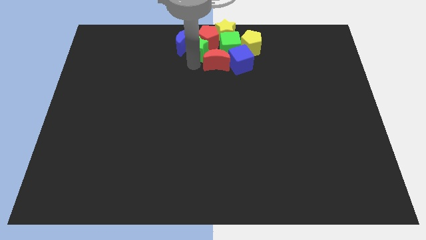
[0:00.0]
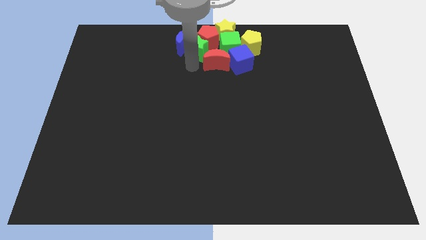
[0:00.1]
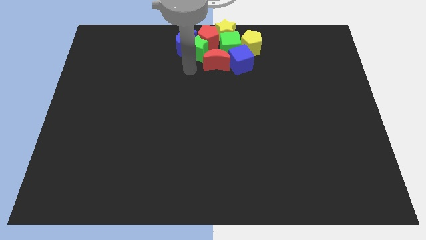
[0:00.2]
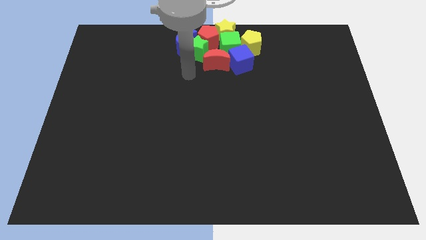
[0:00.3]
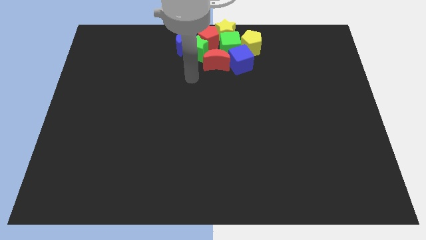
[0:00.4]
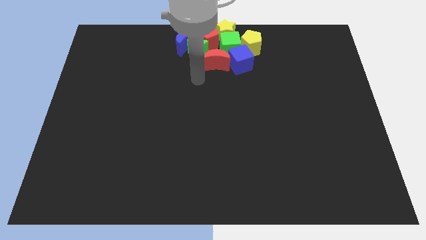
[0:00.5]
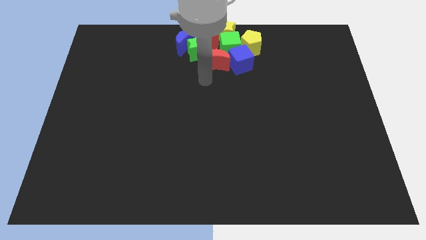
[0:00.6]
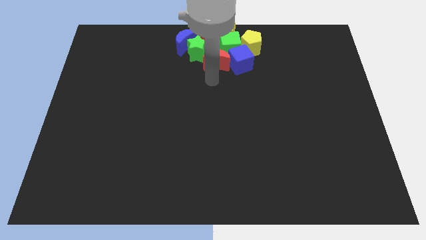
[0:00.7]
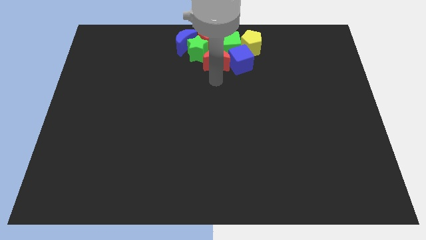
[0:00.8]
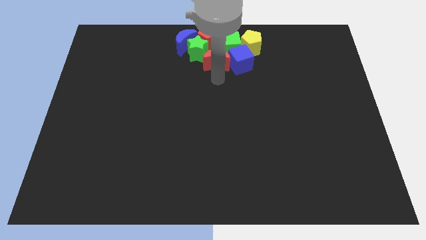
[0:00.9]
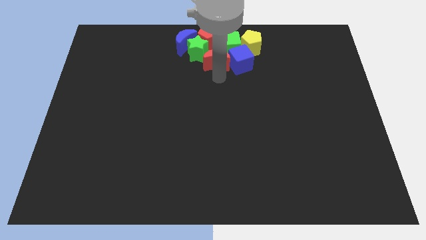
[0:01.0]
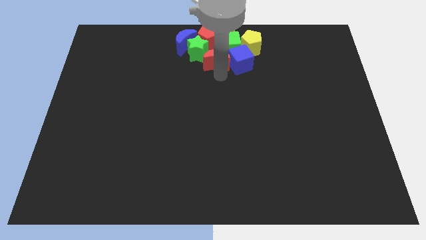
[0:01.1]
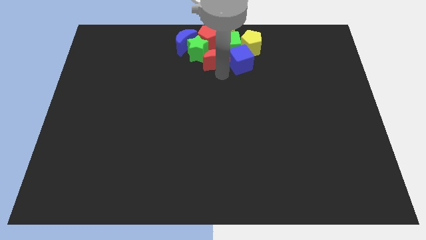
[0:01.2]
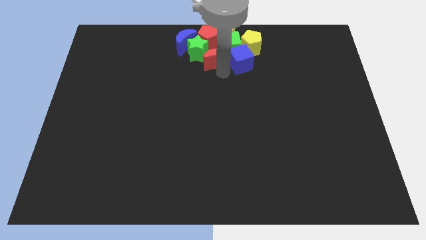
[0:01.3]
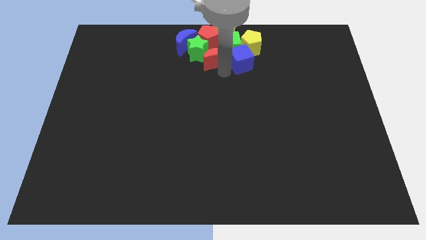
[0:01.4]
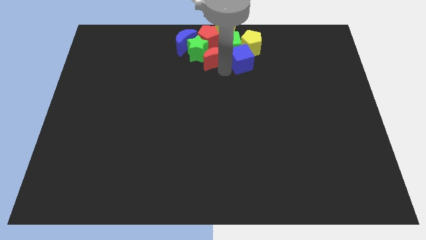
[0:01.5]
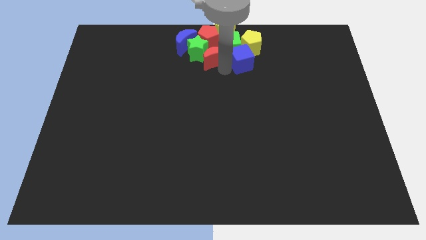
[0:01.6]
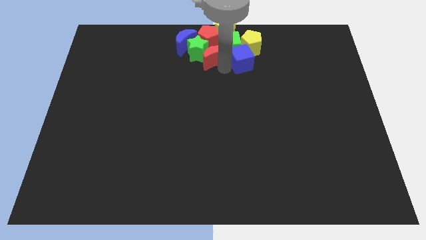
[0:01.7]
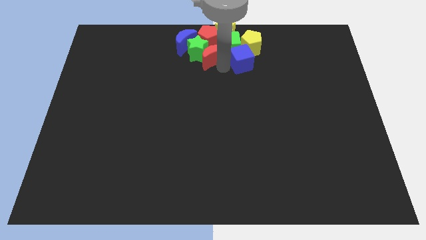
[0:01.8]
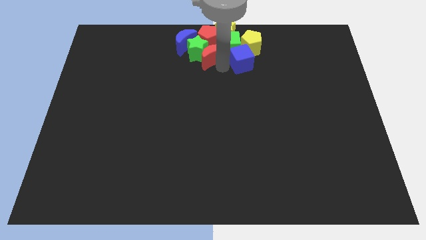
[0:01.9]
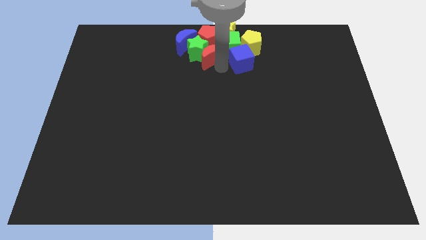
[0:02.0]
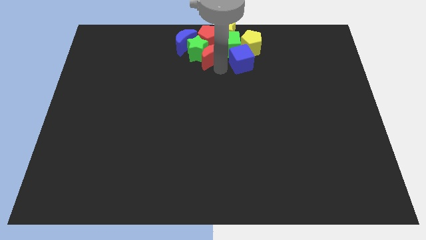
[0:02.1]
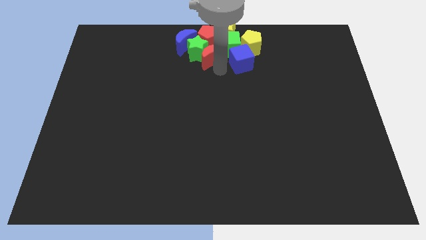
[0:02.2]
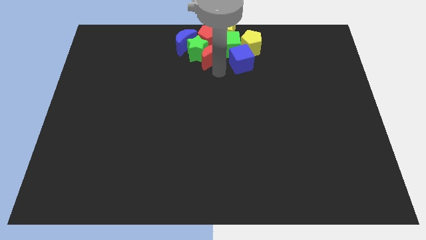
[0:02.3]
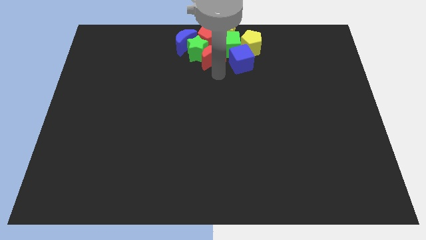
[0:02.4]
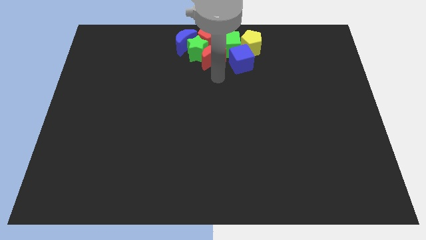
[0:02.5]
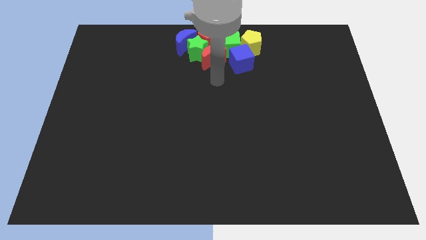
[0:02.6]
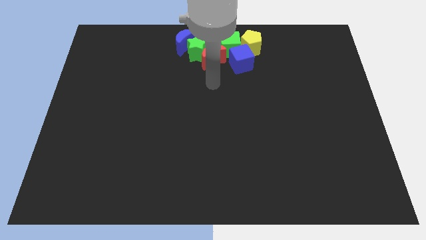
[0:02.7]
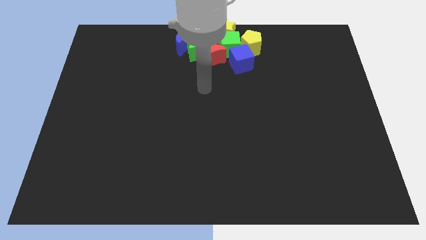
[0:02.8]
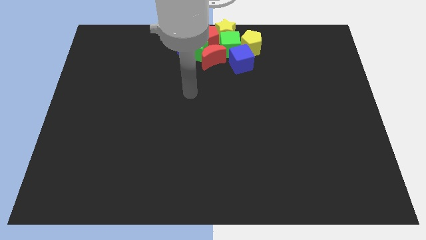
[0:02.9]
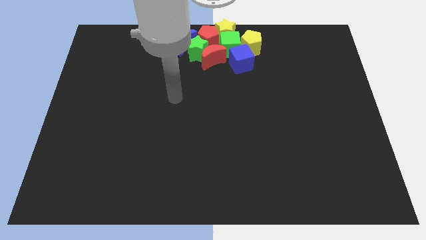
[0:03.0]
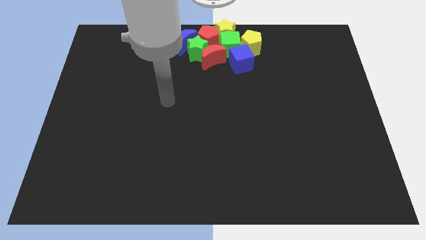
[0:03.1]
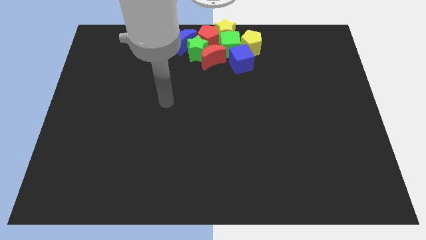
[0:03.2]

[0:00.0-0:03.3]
move the red moon into the green star

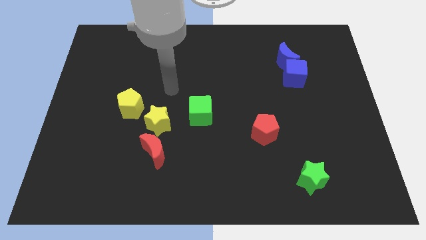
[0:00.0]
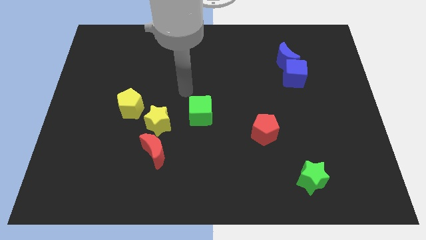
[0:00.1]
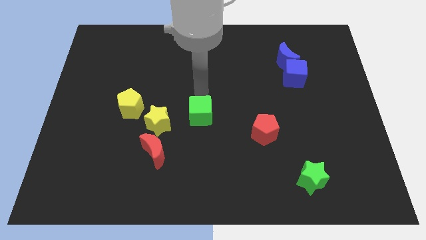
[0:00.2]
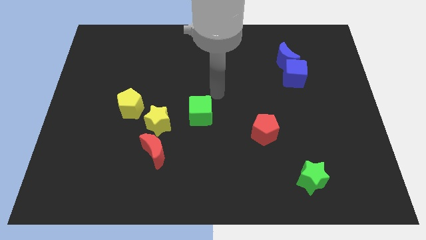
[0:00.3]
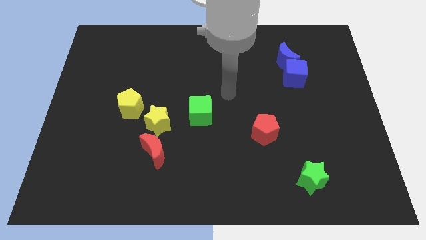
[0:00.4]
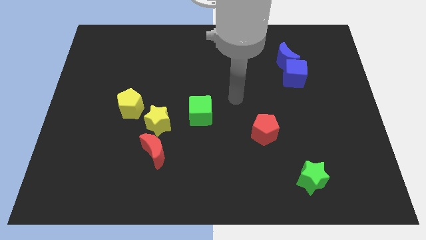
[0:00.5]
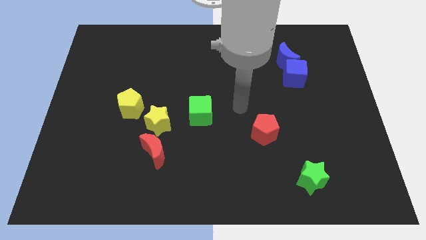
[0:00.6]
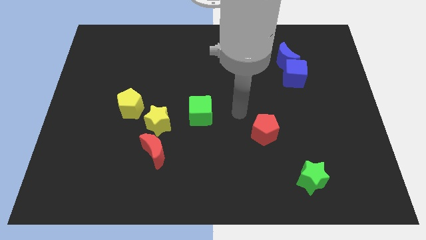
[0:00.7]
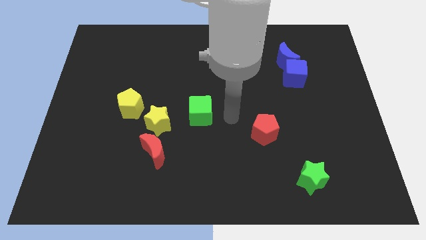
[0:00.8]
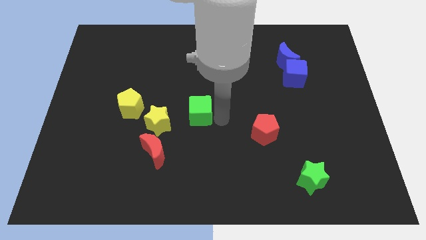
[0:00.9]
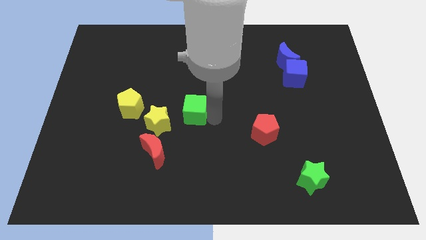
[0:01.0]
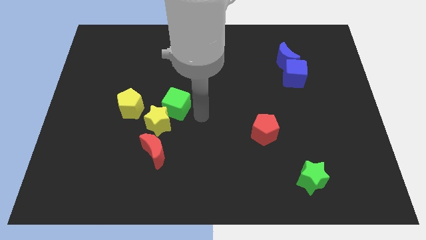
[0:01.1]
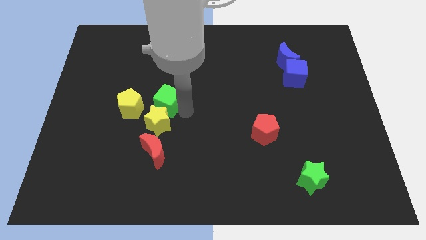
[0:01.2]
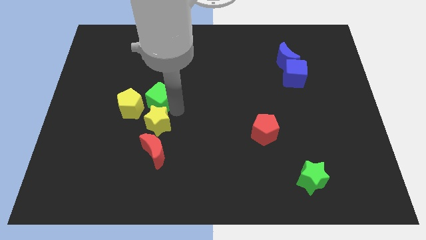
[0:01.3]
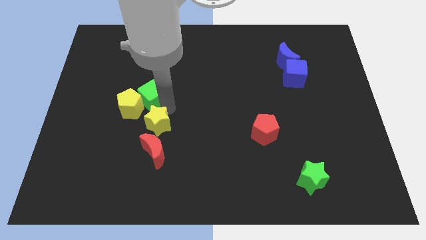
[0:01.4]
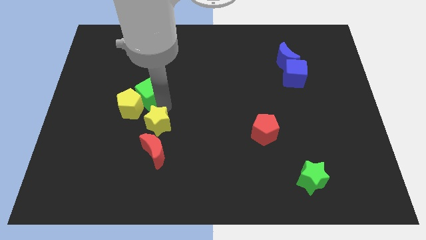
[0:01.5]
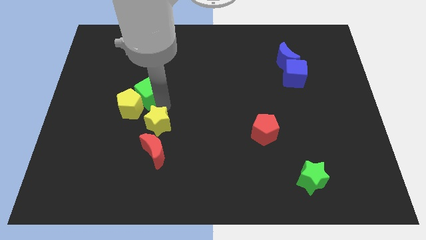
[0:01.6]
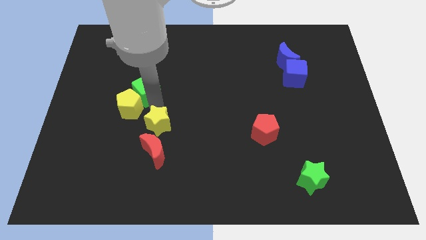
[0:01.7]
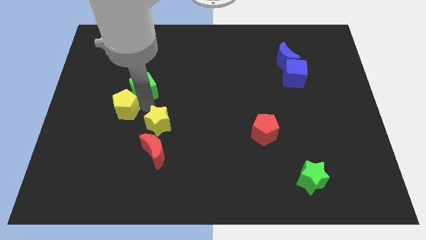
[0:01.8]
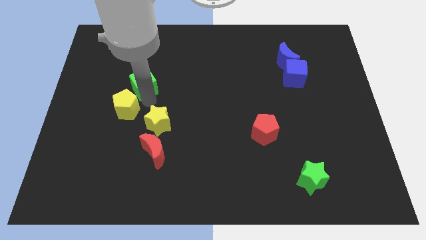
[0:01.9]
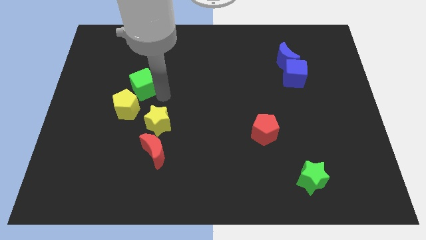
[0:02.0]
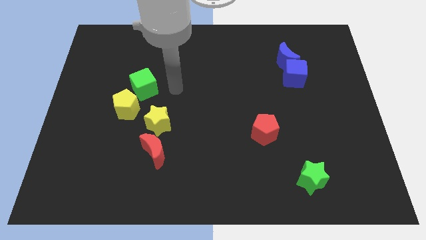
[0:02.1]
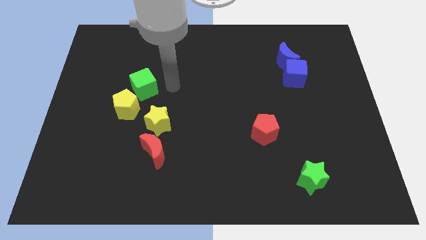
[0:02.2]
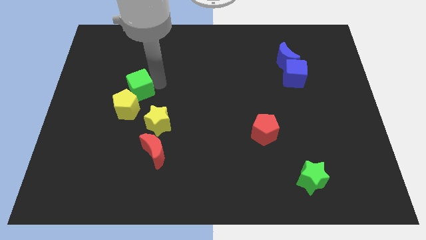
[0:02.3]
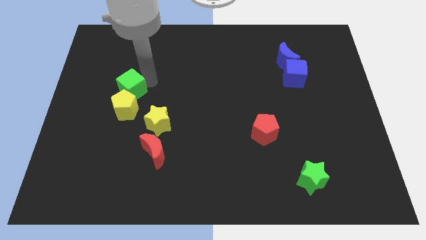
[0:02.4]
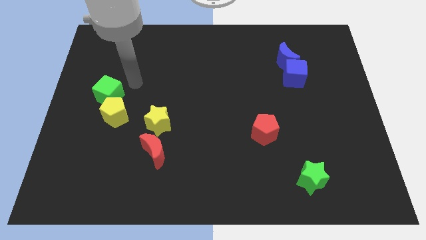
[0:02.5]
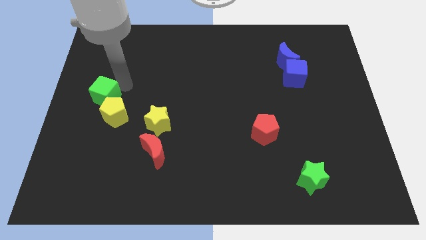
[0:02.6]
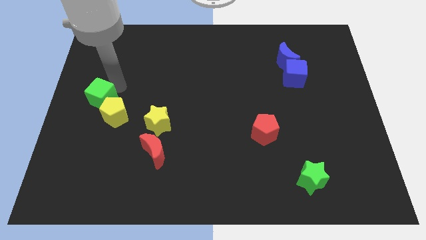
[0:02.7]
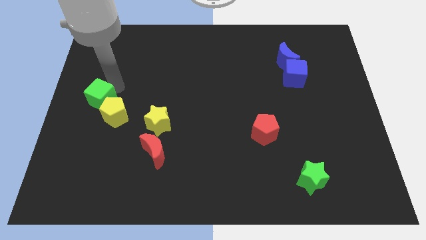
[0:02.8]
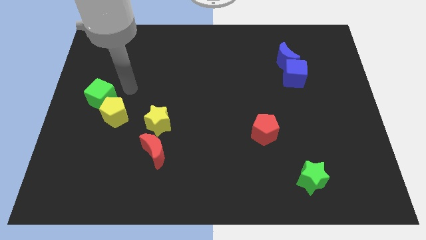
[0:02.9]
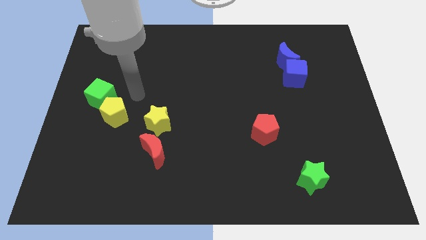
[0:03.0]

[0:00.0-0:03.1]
push the green cube to the top left of the yellow pentagon

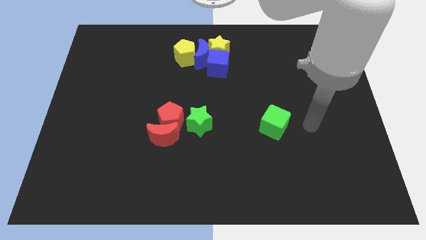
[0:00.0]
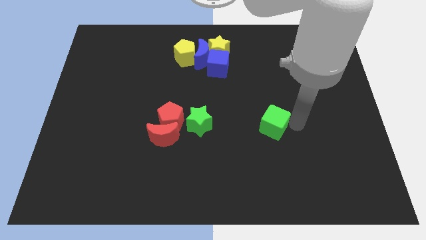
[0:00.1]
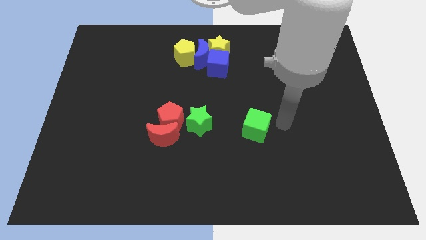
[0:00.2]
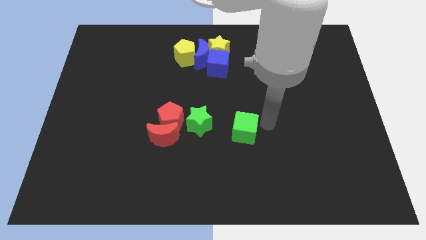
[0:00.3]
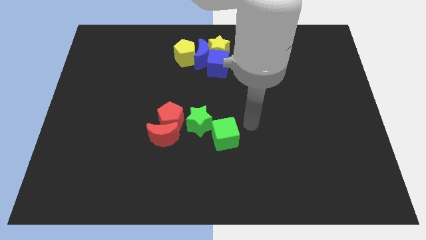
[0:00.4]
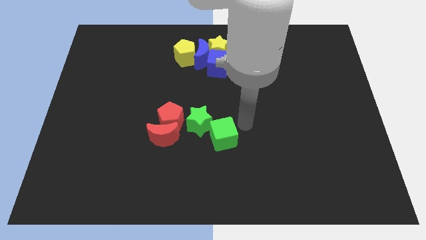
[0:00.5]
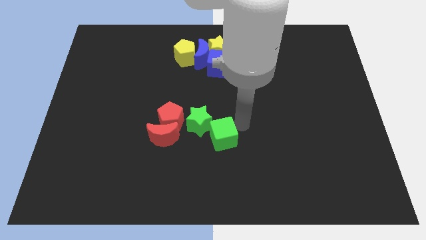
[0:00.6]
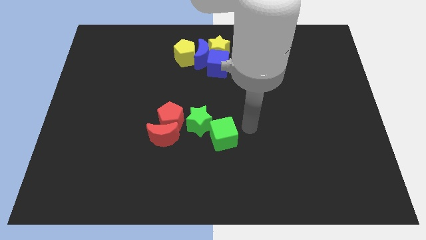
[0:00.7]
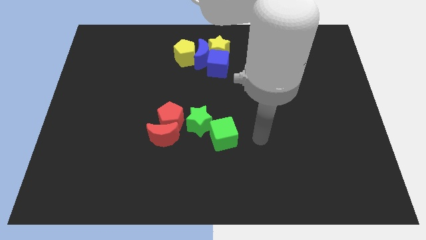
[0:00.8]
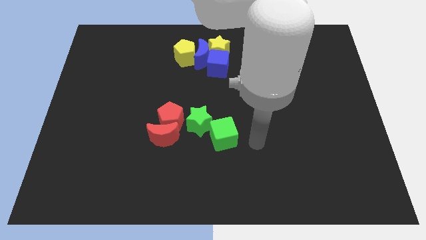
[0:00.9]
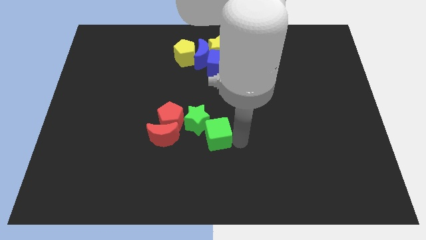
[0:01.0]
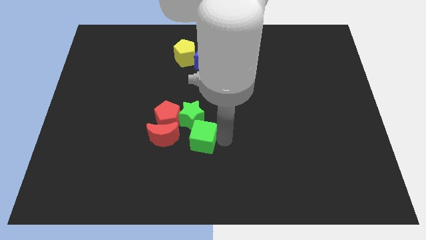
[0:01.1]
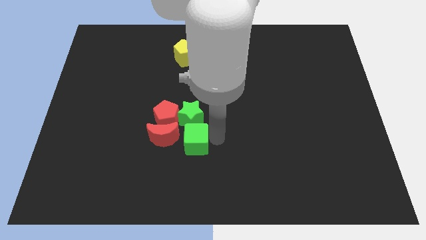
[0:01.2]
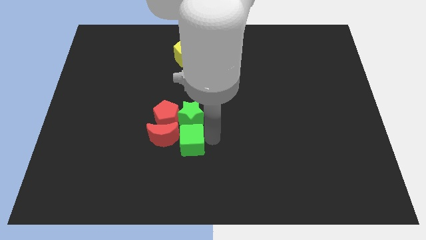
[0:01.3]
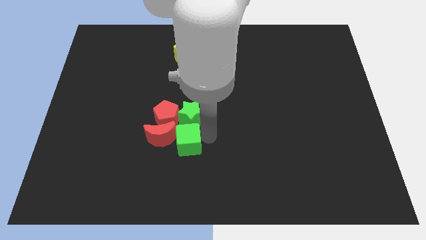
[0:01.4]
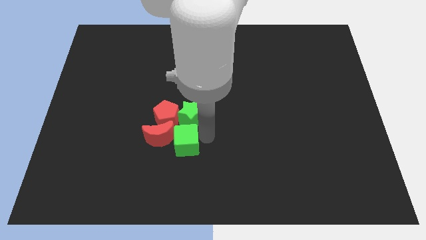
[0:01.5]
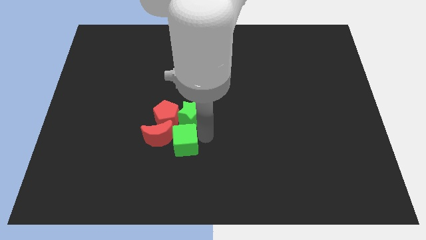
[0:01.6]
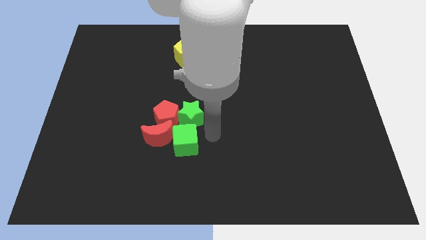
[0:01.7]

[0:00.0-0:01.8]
push the green cube into the group of blocks

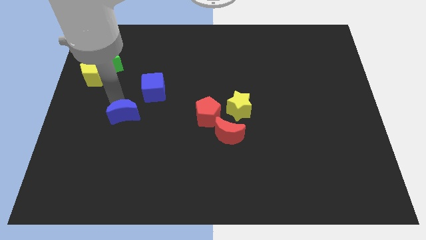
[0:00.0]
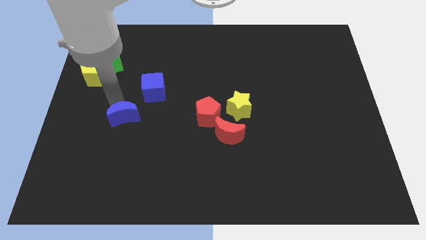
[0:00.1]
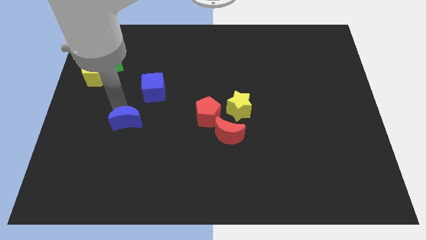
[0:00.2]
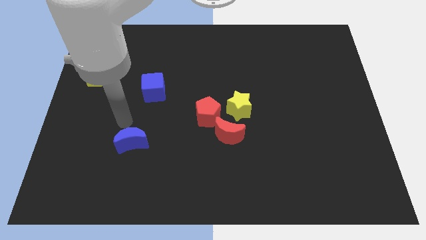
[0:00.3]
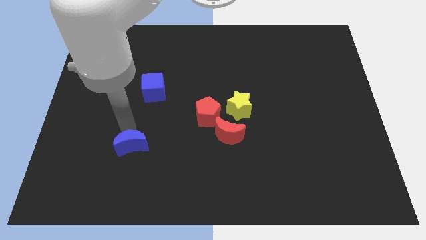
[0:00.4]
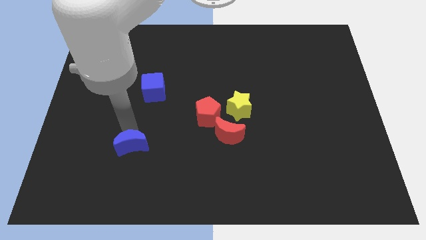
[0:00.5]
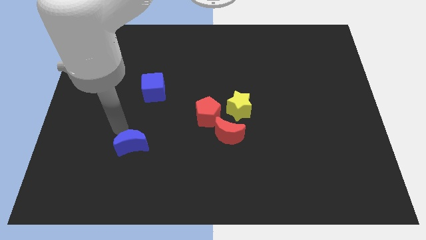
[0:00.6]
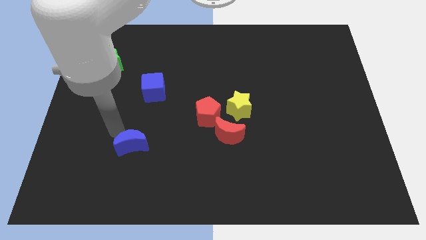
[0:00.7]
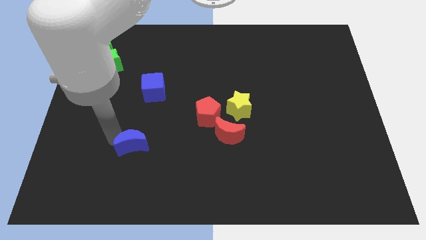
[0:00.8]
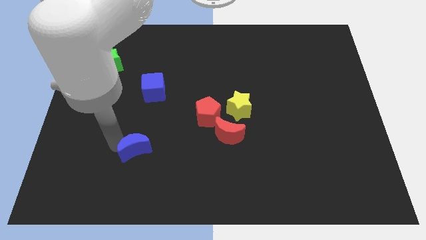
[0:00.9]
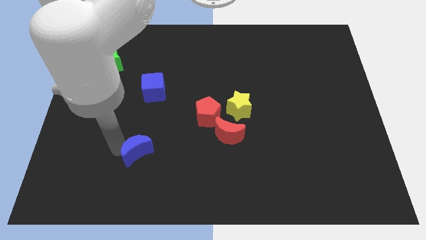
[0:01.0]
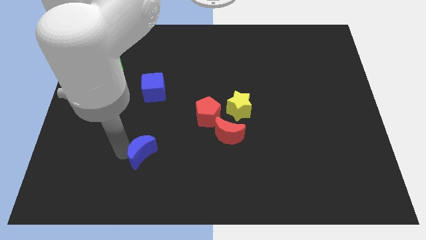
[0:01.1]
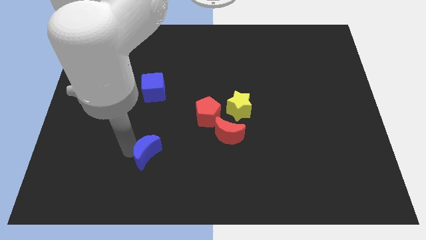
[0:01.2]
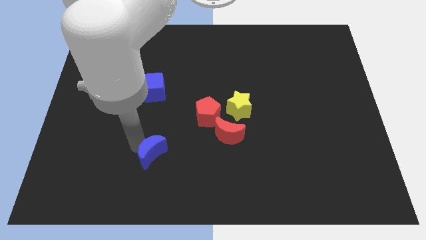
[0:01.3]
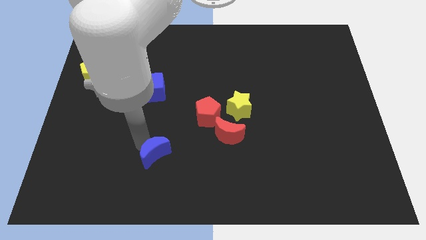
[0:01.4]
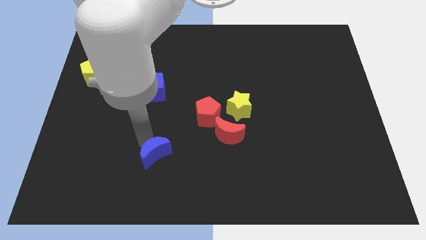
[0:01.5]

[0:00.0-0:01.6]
push the blue crescent to the bottom of the board
